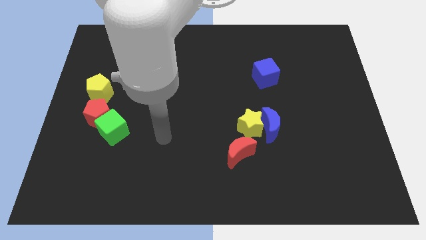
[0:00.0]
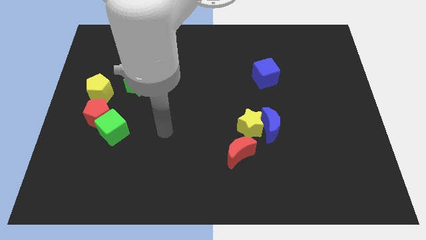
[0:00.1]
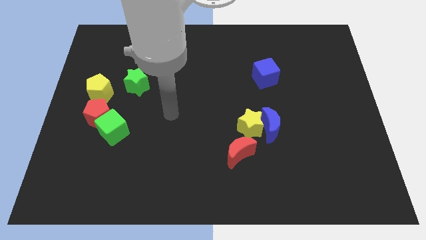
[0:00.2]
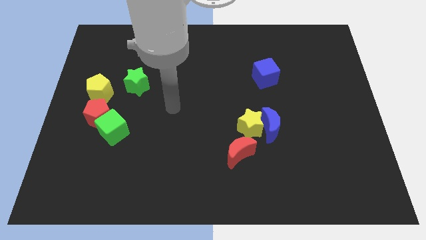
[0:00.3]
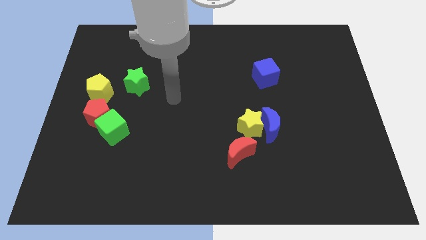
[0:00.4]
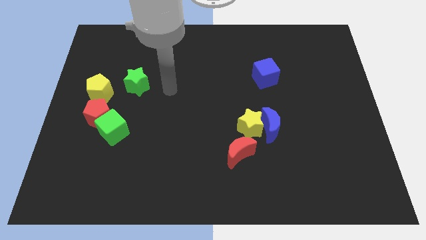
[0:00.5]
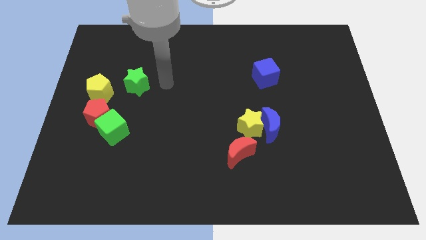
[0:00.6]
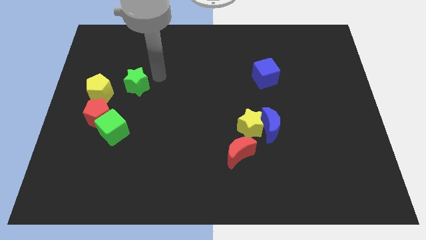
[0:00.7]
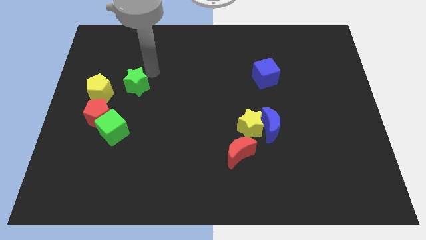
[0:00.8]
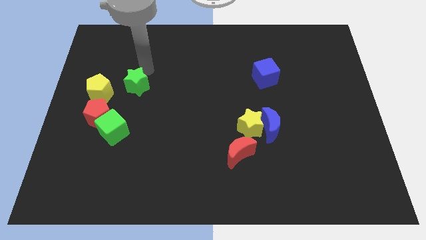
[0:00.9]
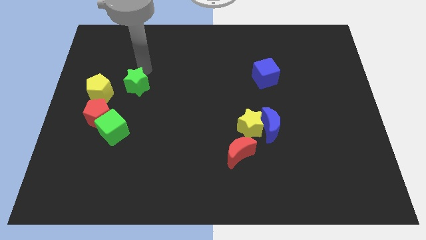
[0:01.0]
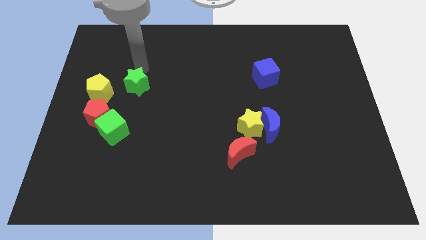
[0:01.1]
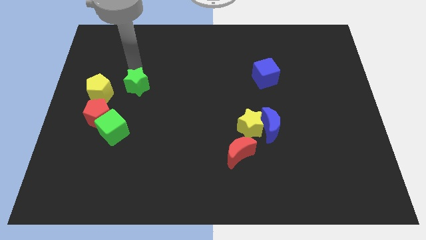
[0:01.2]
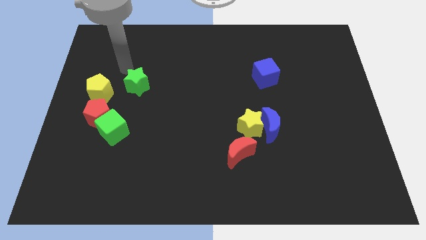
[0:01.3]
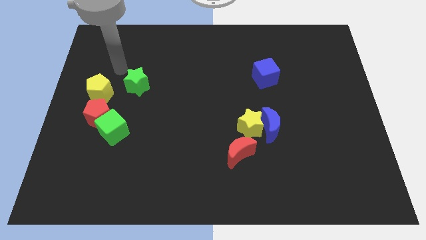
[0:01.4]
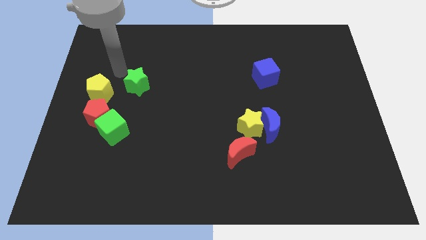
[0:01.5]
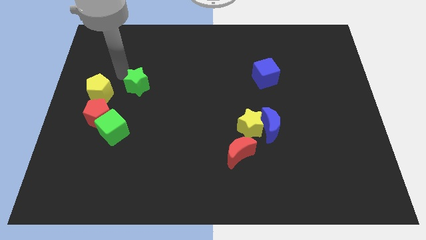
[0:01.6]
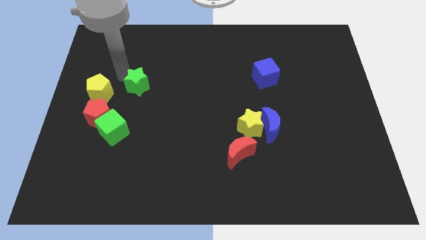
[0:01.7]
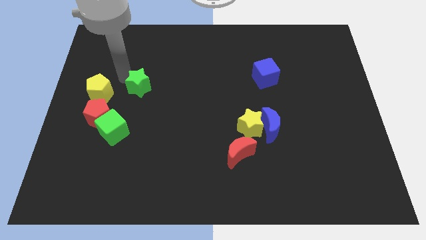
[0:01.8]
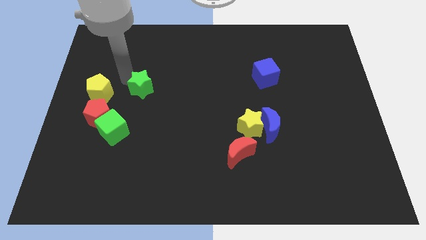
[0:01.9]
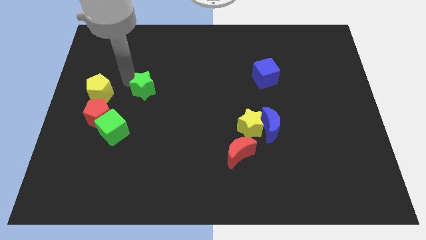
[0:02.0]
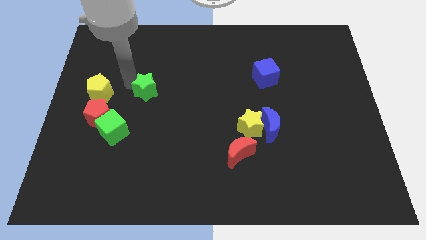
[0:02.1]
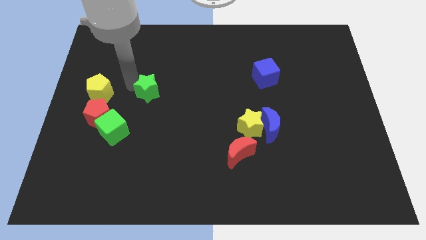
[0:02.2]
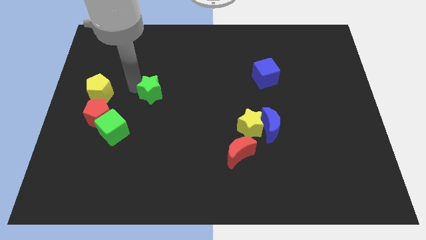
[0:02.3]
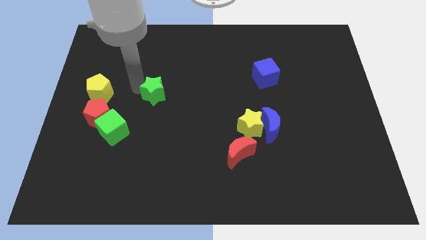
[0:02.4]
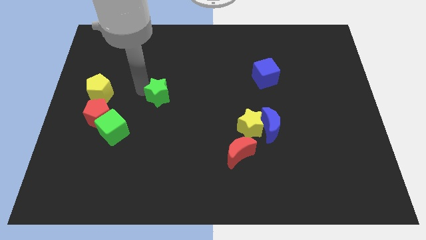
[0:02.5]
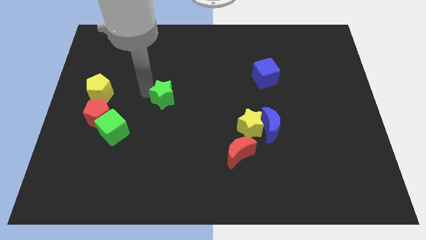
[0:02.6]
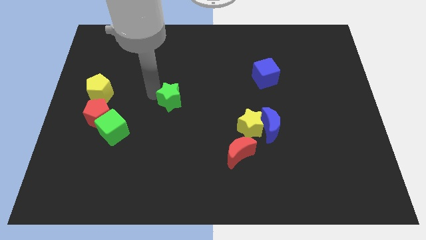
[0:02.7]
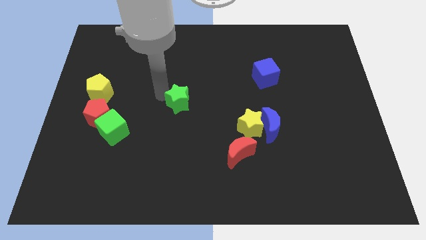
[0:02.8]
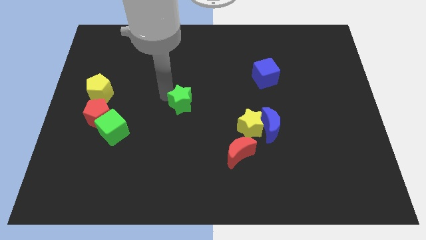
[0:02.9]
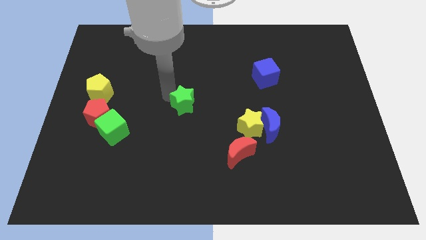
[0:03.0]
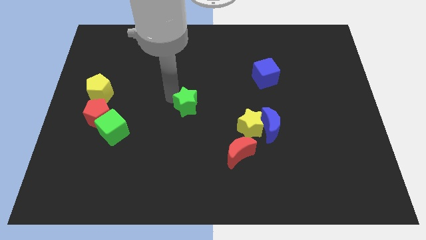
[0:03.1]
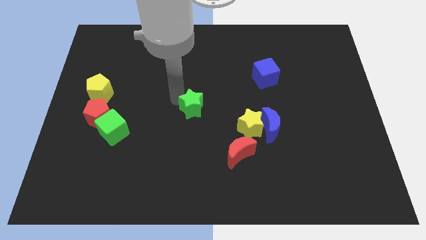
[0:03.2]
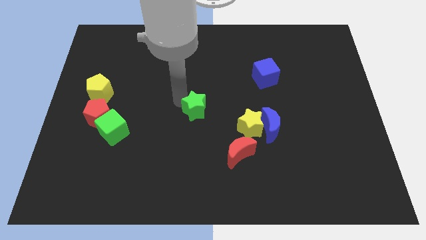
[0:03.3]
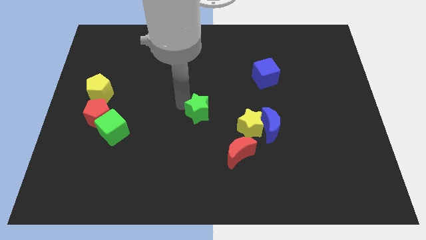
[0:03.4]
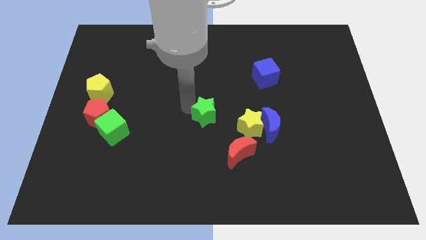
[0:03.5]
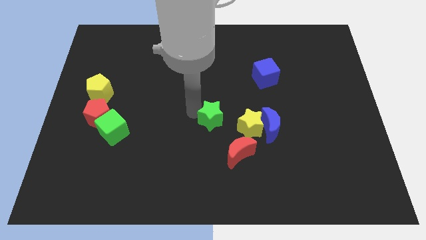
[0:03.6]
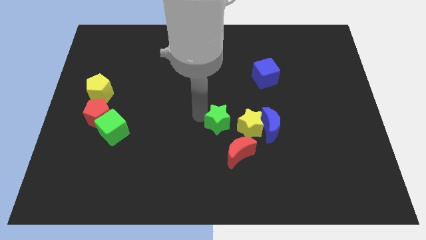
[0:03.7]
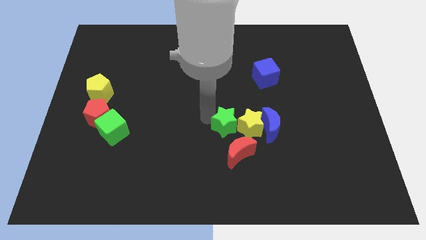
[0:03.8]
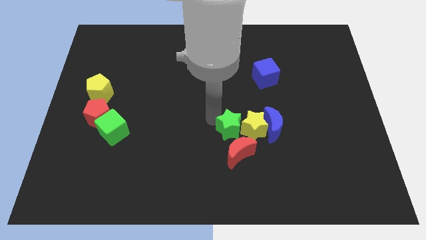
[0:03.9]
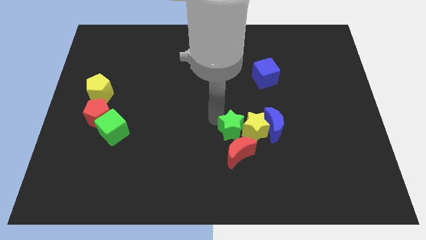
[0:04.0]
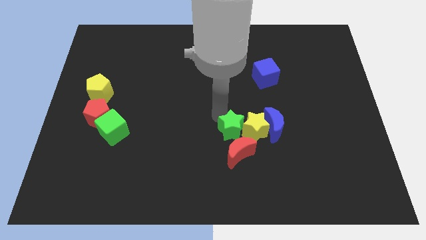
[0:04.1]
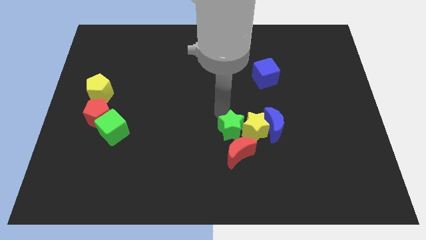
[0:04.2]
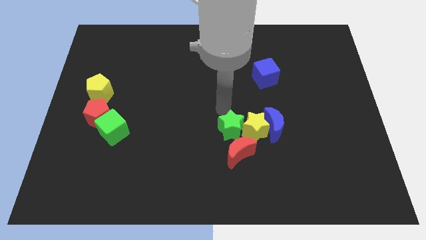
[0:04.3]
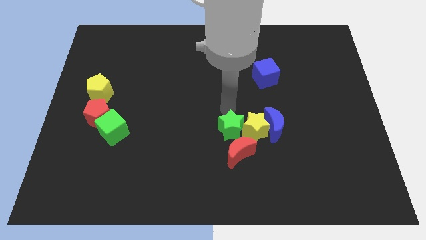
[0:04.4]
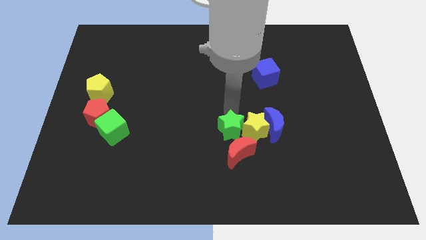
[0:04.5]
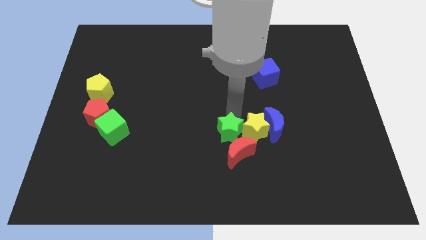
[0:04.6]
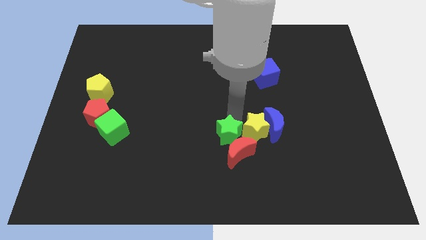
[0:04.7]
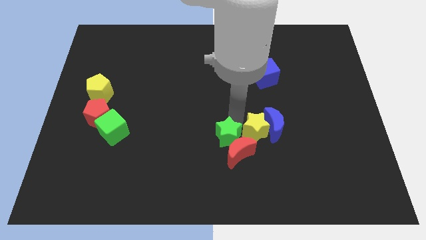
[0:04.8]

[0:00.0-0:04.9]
move the green star towards the red moon

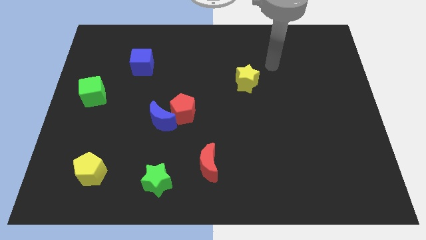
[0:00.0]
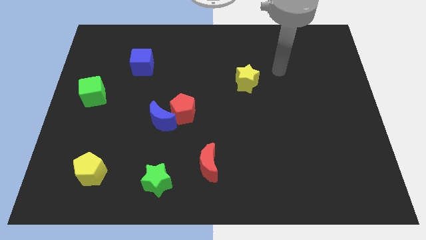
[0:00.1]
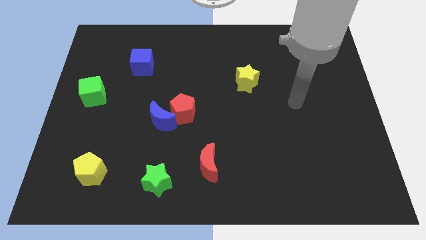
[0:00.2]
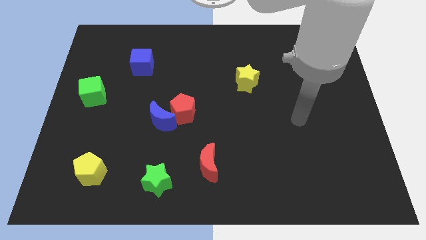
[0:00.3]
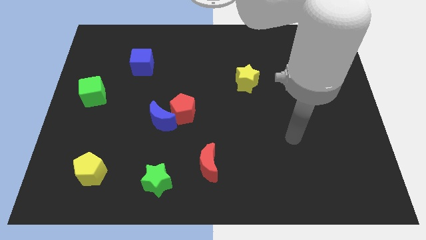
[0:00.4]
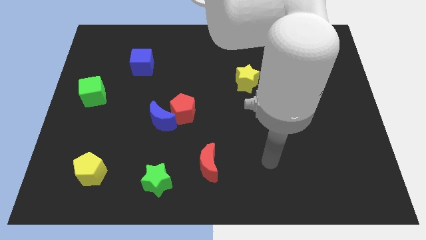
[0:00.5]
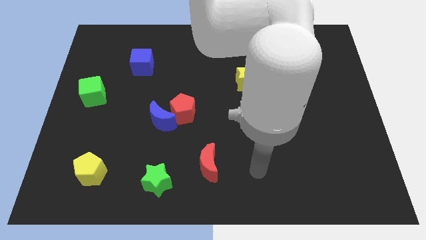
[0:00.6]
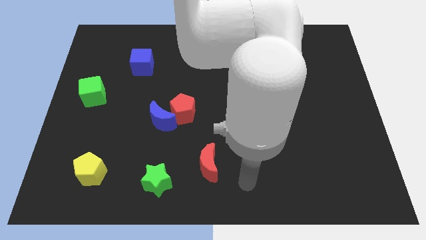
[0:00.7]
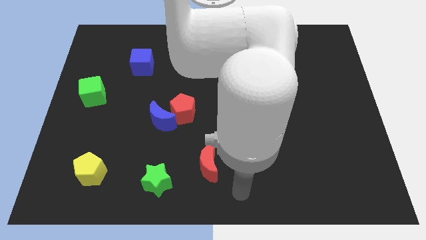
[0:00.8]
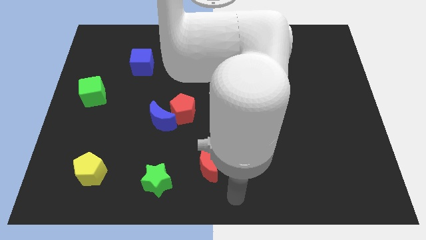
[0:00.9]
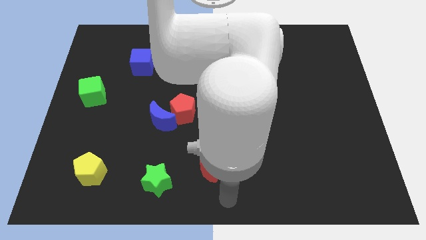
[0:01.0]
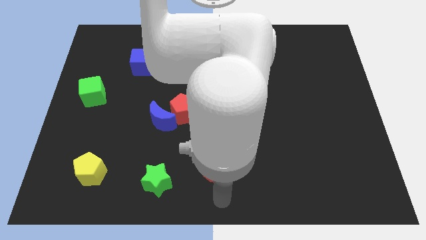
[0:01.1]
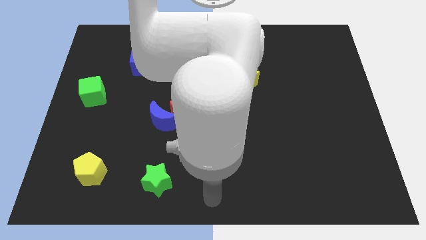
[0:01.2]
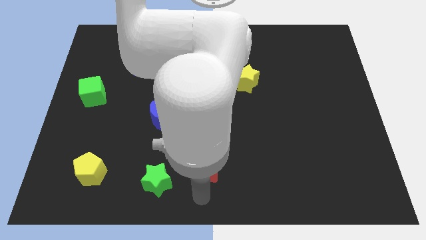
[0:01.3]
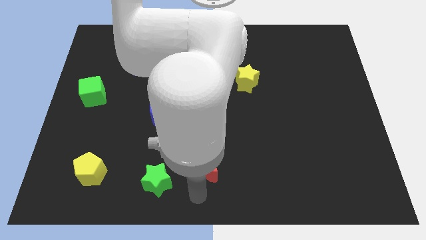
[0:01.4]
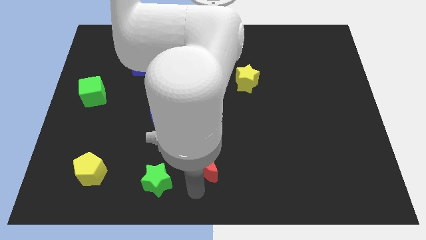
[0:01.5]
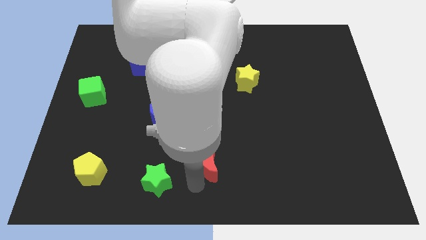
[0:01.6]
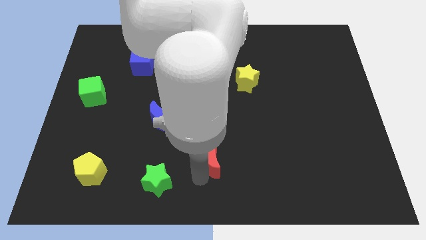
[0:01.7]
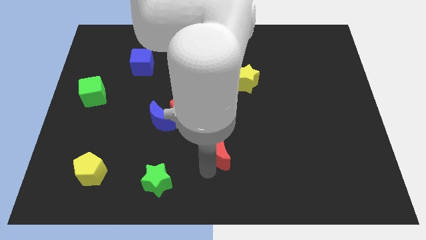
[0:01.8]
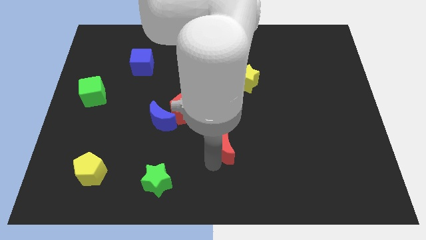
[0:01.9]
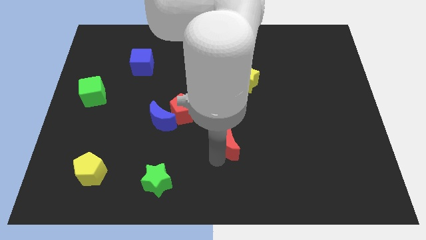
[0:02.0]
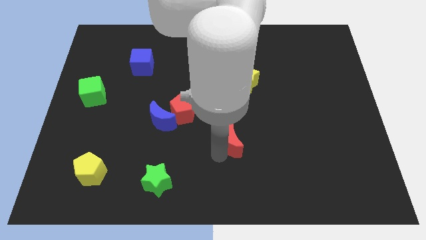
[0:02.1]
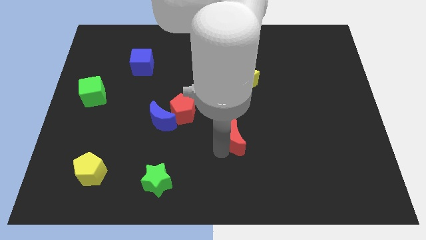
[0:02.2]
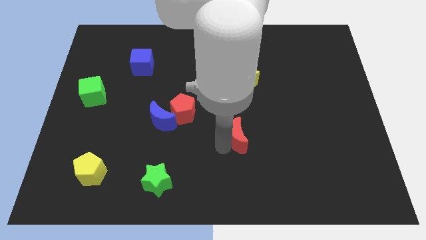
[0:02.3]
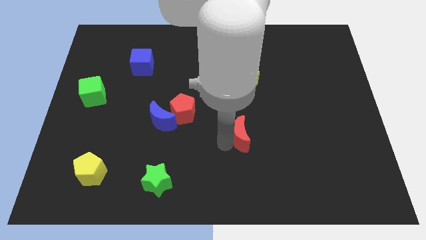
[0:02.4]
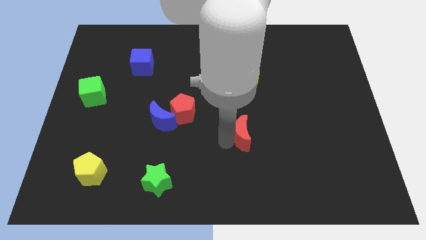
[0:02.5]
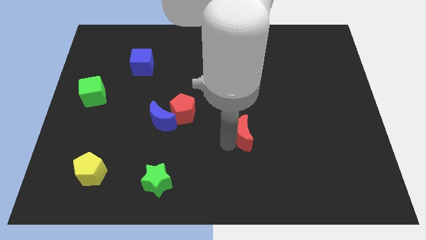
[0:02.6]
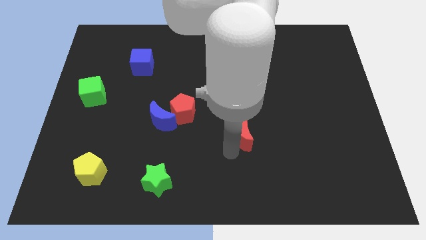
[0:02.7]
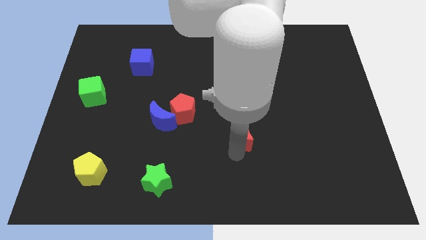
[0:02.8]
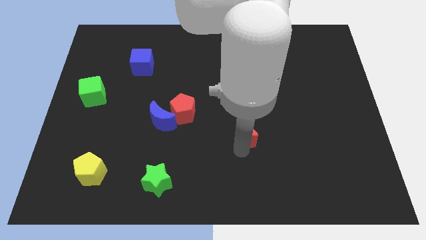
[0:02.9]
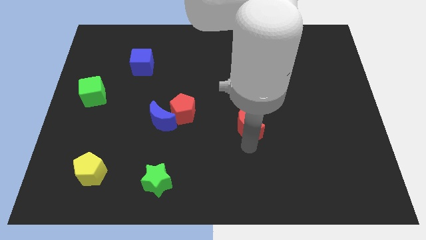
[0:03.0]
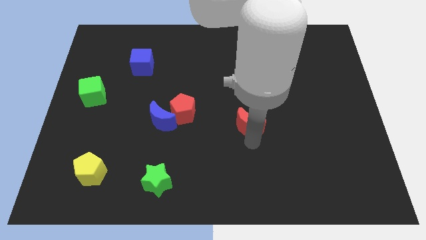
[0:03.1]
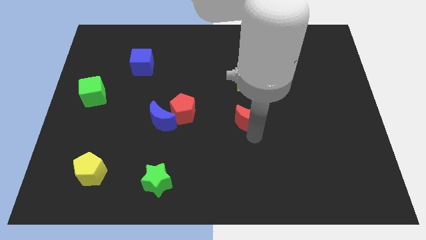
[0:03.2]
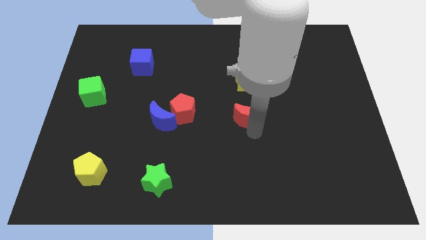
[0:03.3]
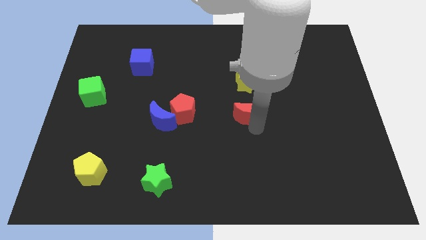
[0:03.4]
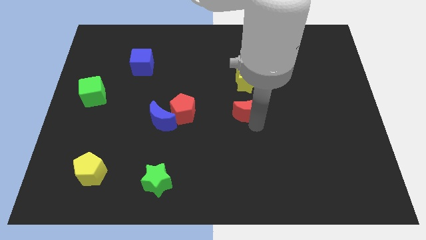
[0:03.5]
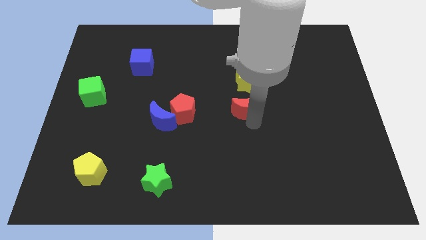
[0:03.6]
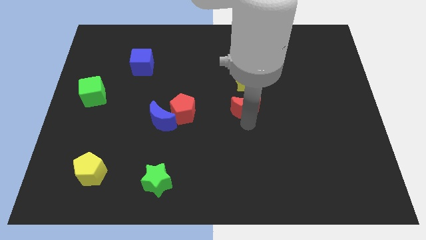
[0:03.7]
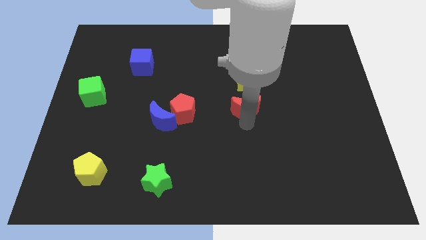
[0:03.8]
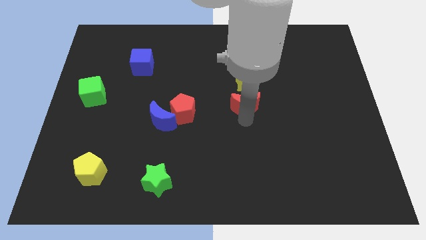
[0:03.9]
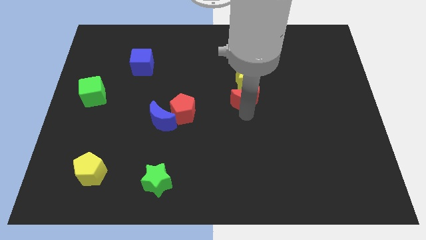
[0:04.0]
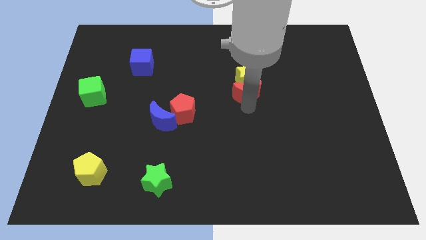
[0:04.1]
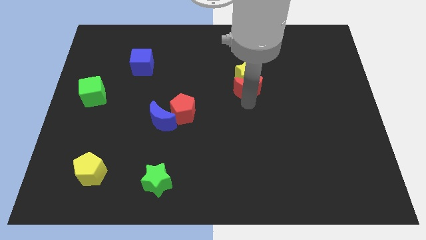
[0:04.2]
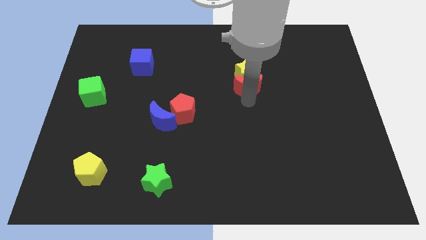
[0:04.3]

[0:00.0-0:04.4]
slide the red moon next to the yellow star
